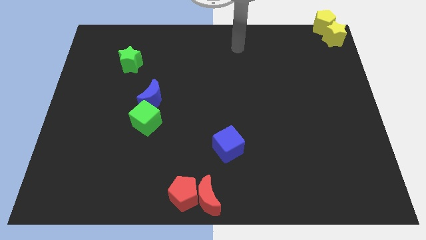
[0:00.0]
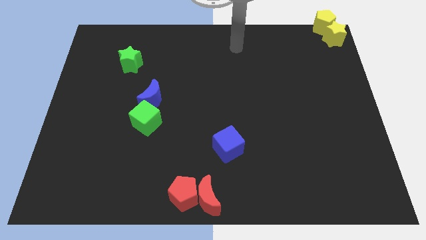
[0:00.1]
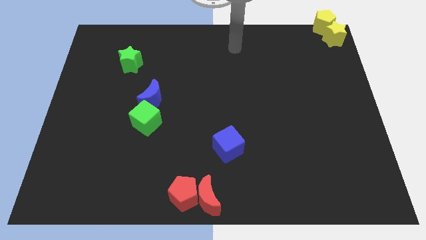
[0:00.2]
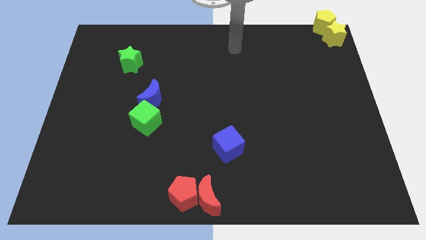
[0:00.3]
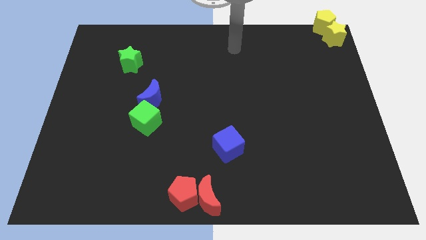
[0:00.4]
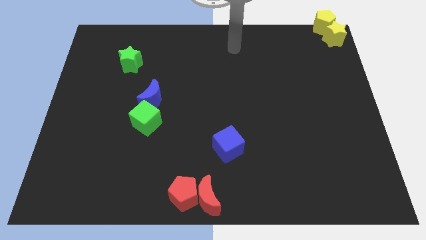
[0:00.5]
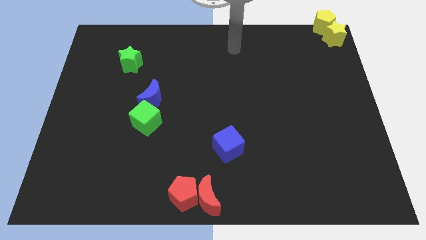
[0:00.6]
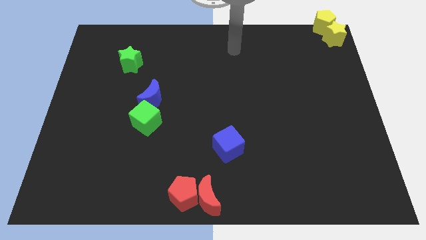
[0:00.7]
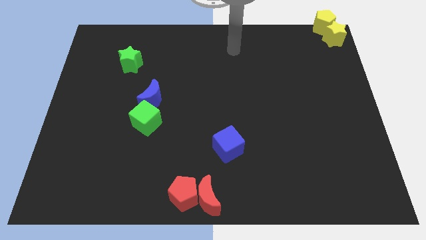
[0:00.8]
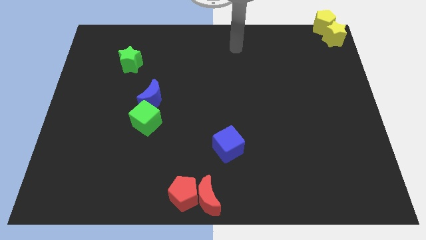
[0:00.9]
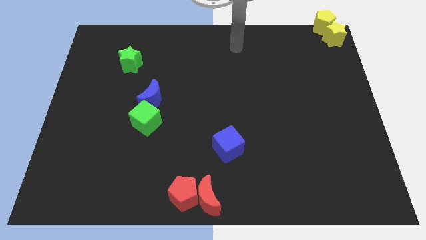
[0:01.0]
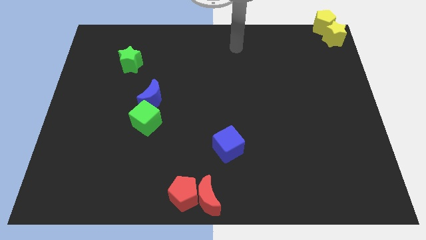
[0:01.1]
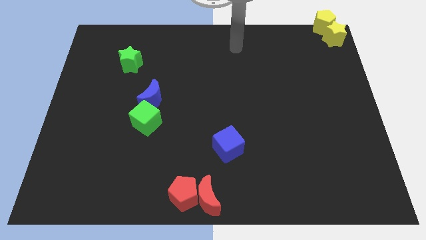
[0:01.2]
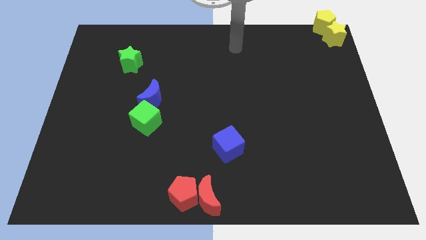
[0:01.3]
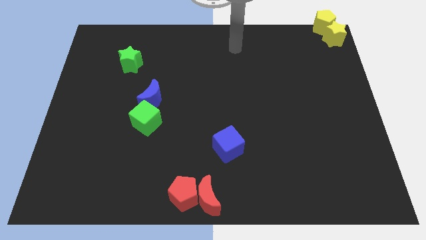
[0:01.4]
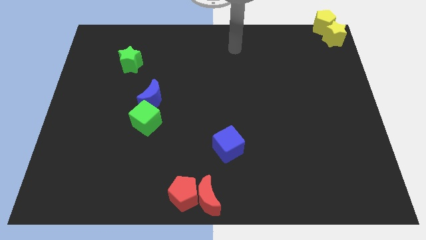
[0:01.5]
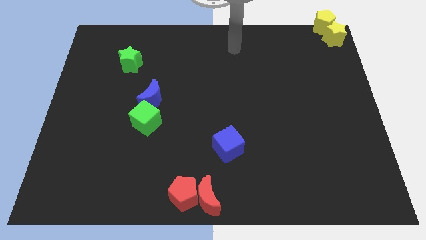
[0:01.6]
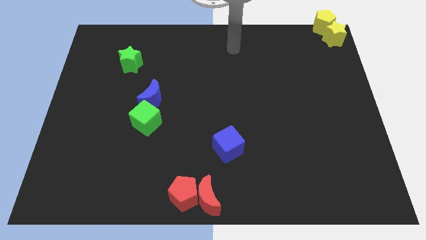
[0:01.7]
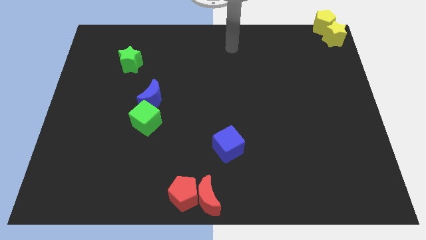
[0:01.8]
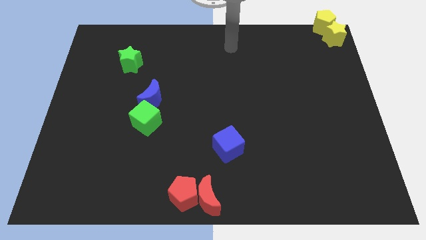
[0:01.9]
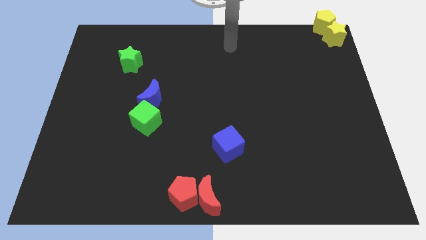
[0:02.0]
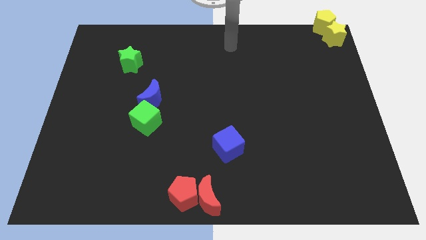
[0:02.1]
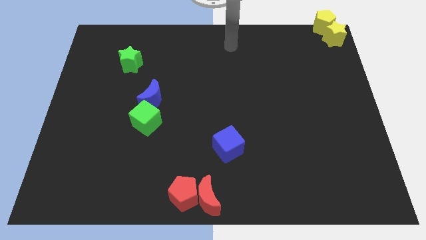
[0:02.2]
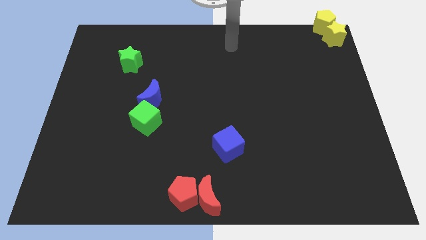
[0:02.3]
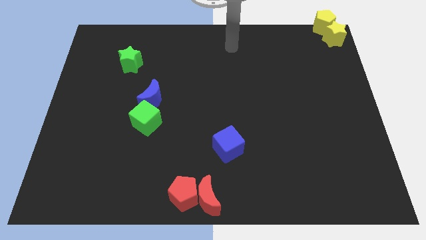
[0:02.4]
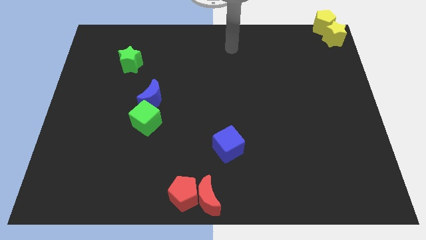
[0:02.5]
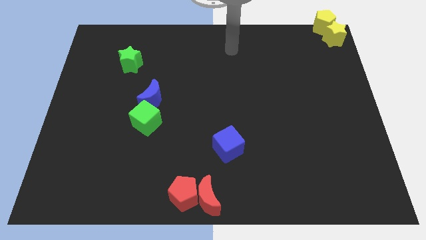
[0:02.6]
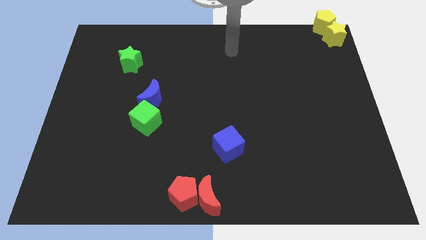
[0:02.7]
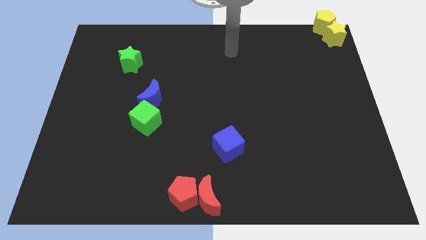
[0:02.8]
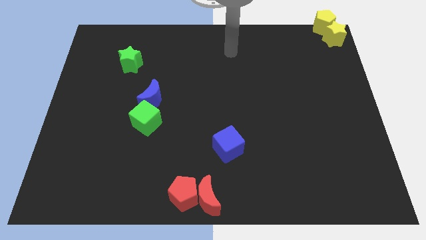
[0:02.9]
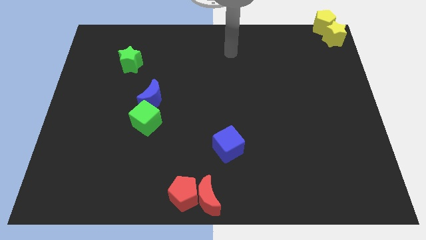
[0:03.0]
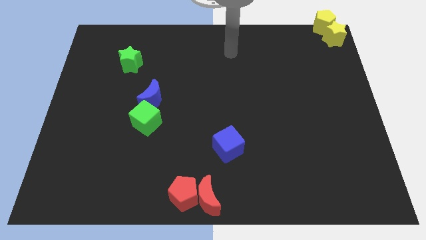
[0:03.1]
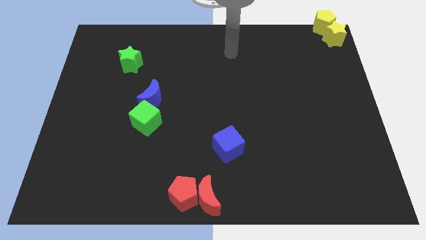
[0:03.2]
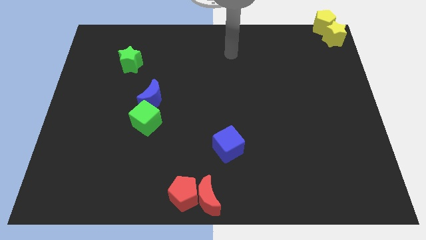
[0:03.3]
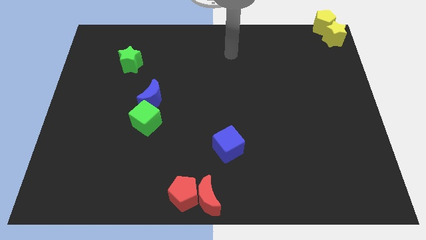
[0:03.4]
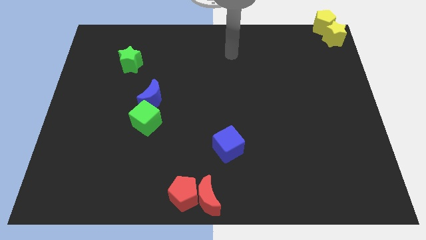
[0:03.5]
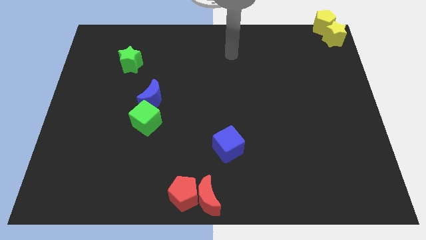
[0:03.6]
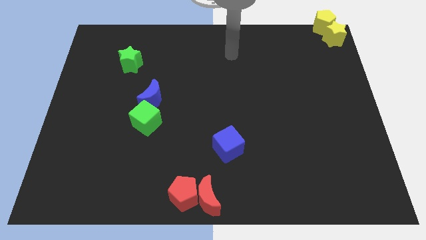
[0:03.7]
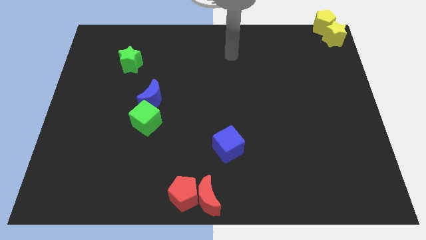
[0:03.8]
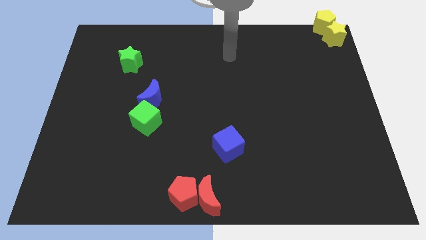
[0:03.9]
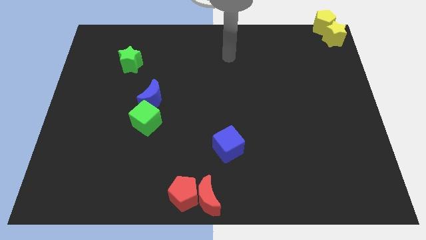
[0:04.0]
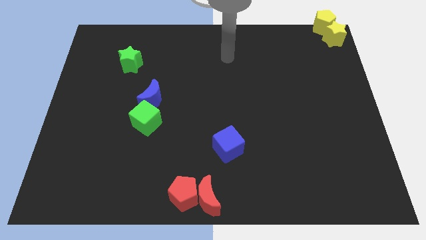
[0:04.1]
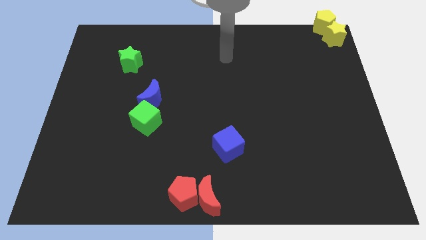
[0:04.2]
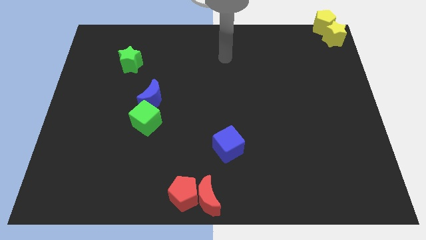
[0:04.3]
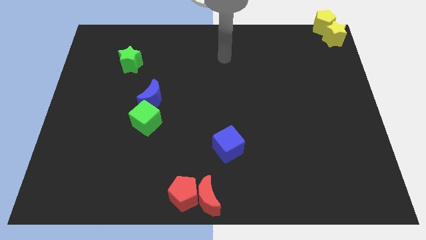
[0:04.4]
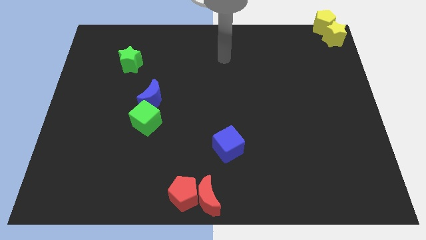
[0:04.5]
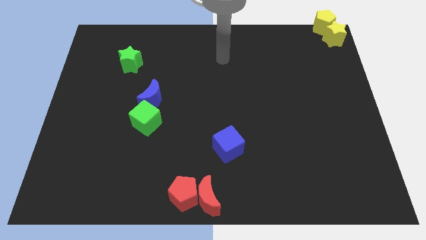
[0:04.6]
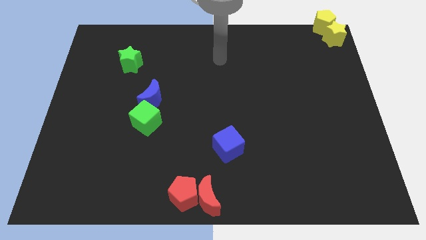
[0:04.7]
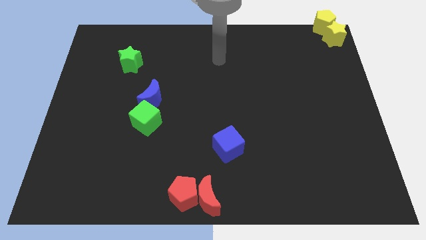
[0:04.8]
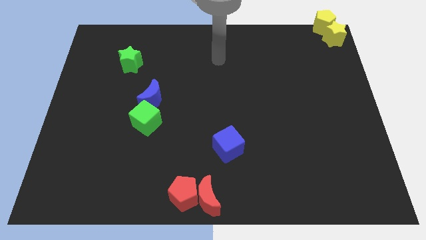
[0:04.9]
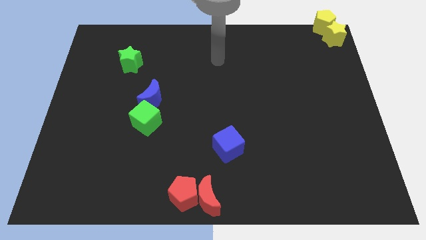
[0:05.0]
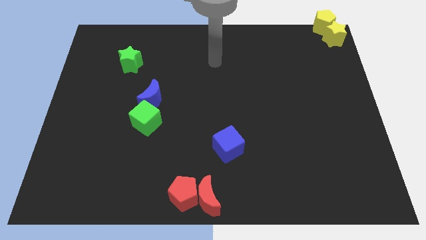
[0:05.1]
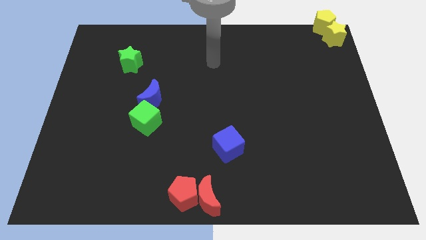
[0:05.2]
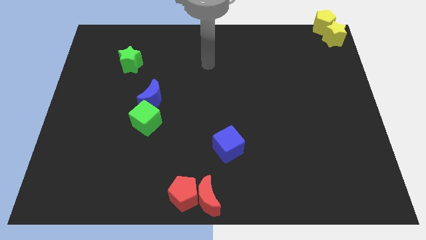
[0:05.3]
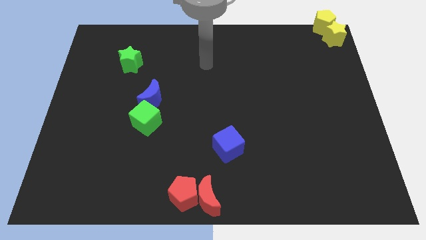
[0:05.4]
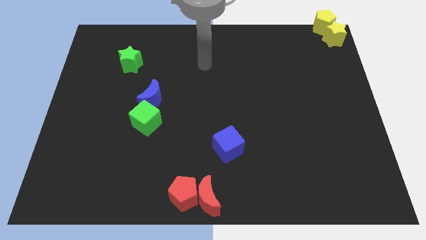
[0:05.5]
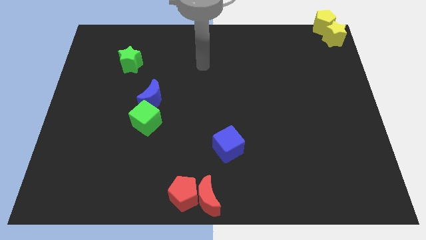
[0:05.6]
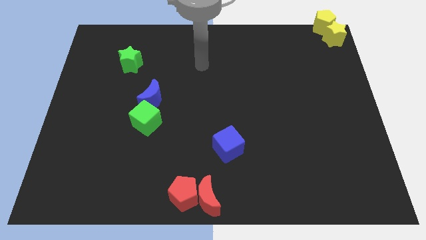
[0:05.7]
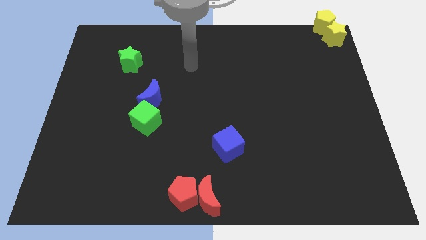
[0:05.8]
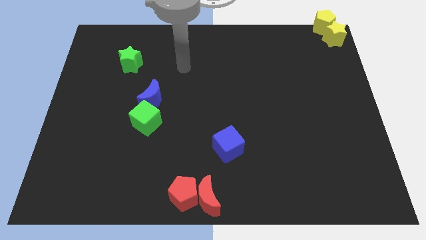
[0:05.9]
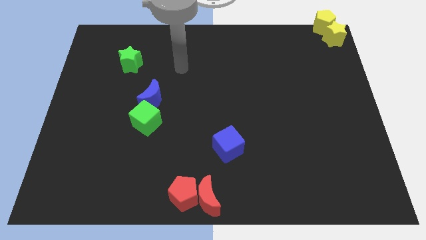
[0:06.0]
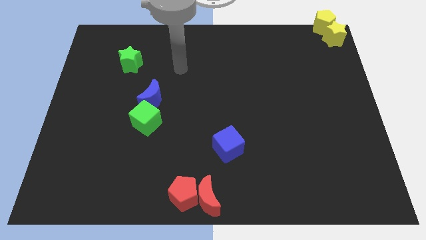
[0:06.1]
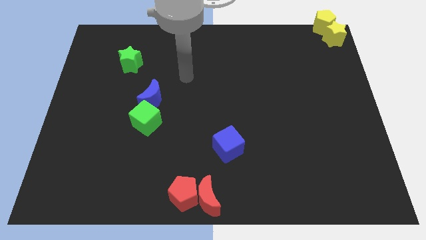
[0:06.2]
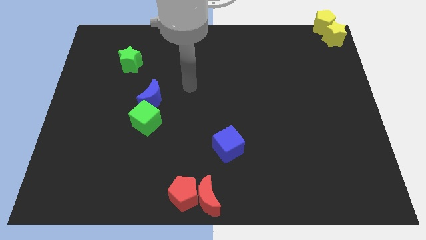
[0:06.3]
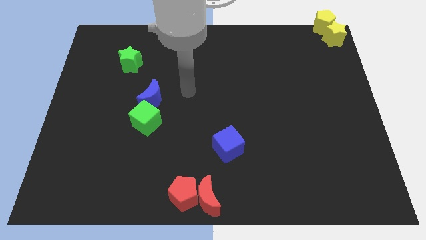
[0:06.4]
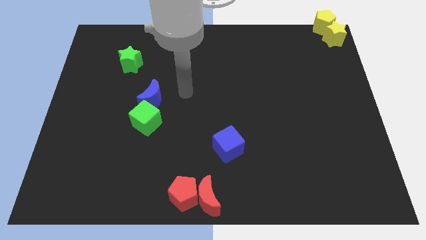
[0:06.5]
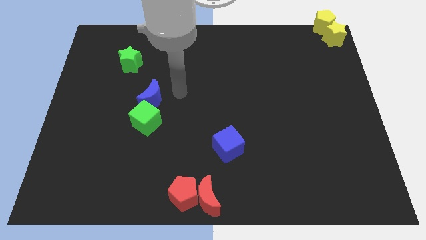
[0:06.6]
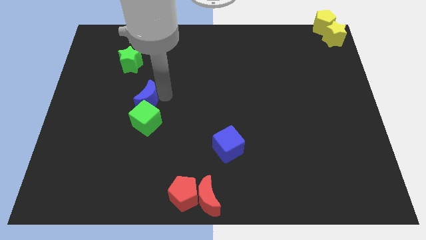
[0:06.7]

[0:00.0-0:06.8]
point your arm at the right side of the blue moon

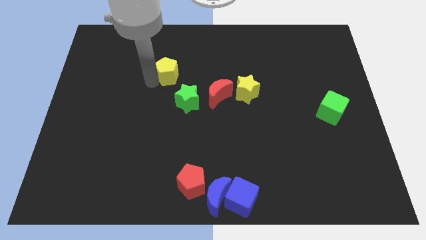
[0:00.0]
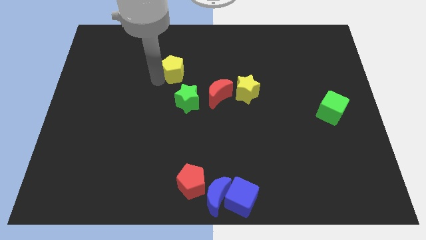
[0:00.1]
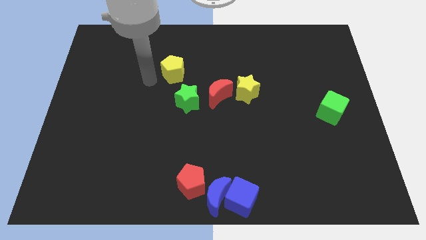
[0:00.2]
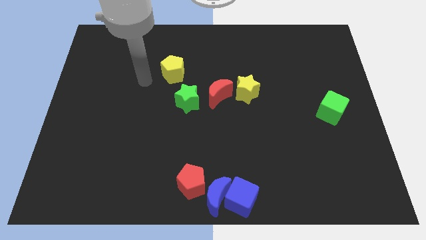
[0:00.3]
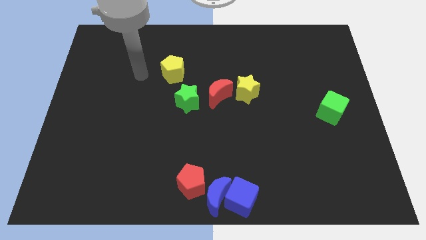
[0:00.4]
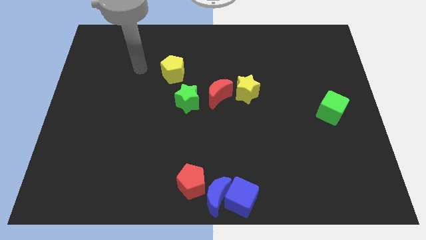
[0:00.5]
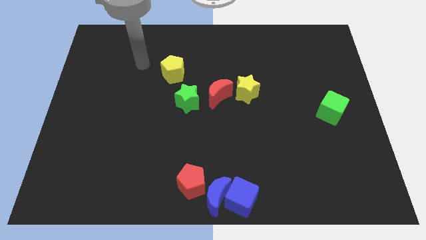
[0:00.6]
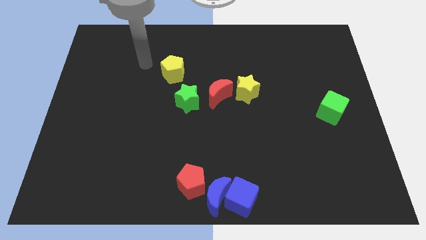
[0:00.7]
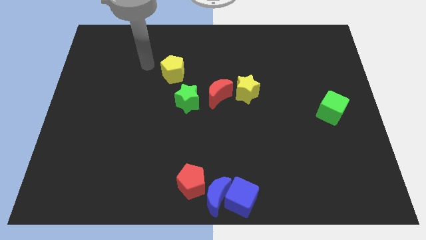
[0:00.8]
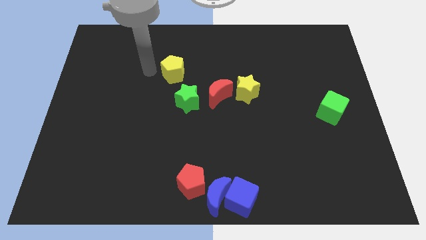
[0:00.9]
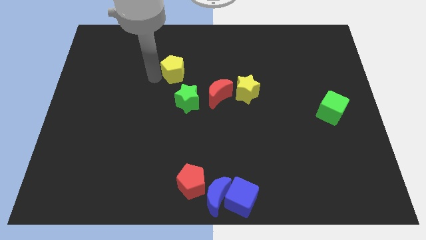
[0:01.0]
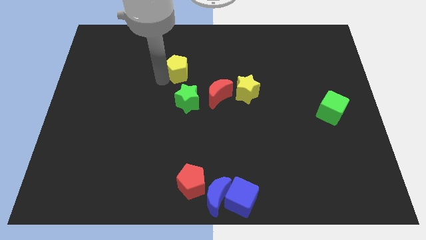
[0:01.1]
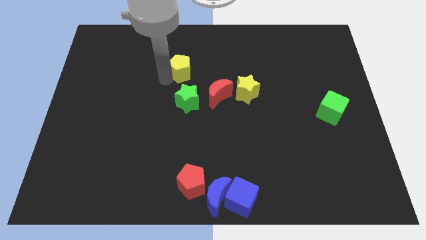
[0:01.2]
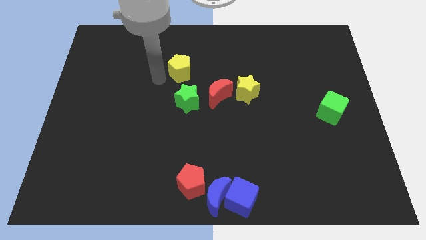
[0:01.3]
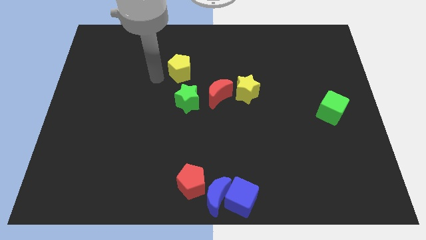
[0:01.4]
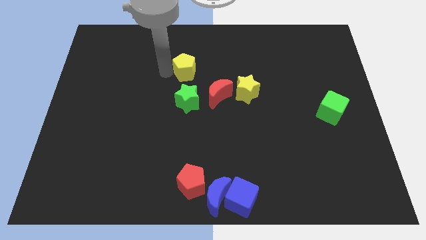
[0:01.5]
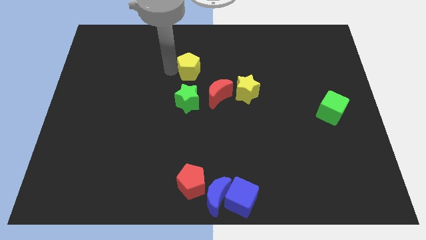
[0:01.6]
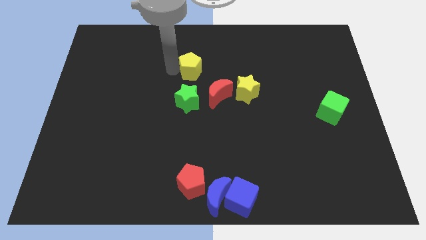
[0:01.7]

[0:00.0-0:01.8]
place the yellow pentagon at the top side of the green star

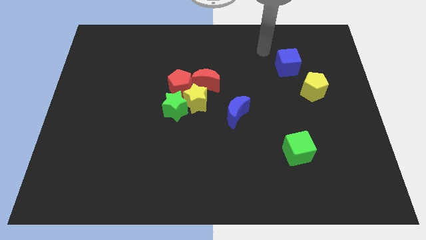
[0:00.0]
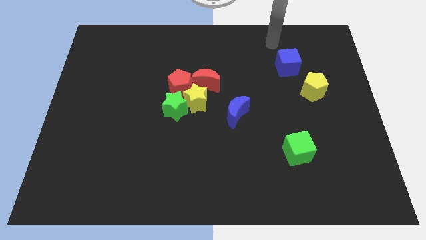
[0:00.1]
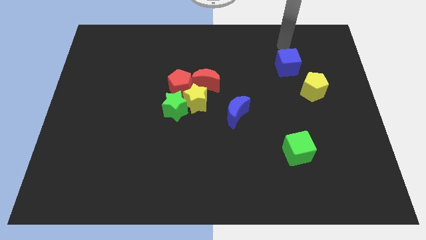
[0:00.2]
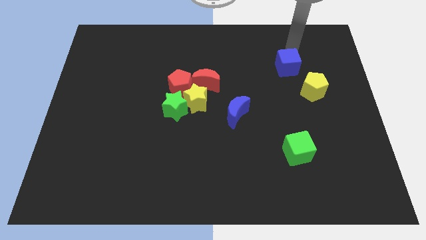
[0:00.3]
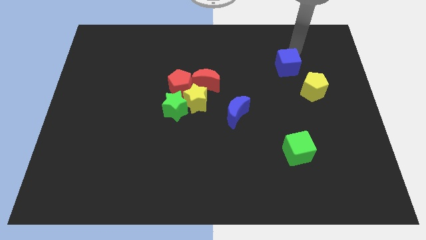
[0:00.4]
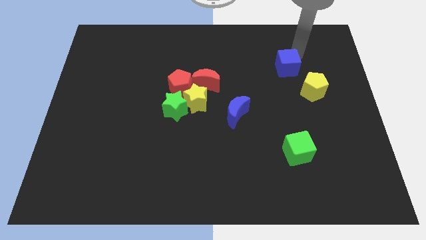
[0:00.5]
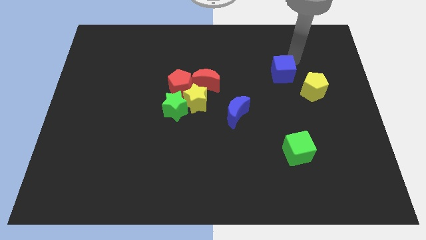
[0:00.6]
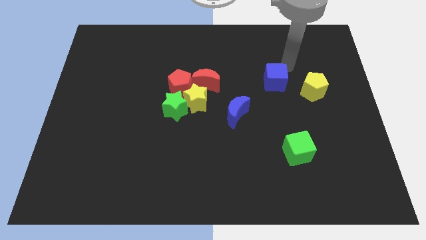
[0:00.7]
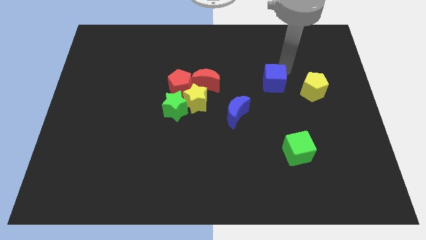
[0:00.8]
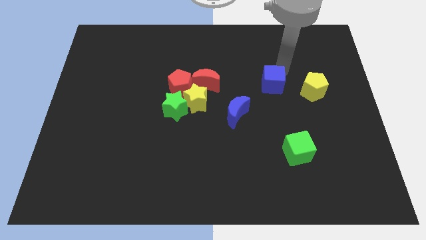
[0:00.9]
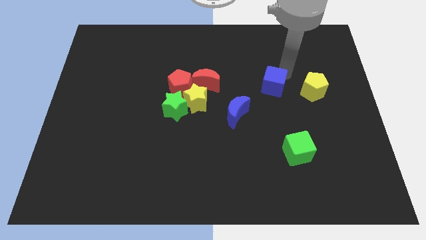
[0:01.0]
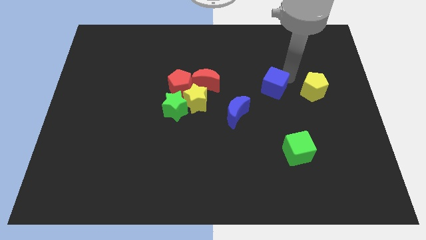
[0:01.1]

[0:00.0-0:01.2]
slightly move the blue cube downwards
